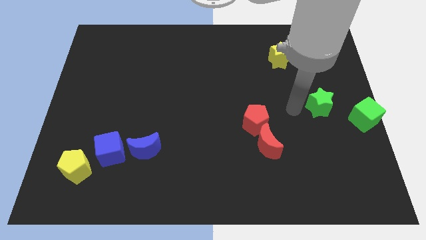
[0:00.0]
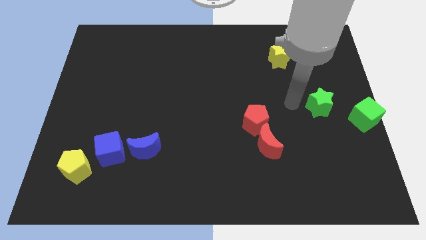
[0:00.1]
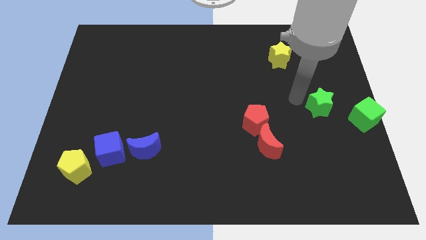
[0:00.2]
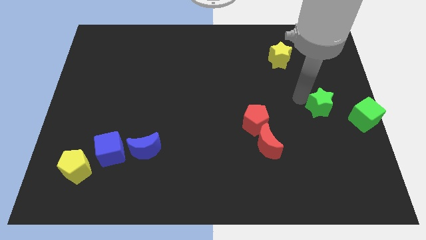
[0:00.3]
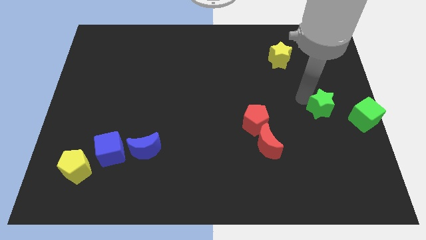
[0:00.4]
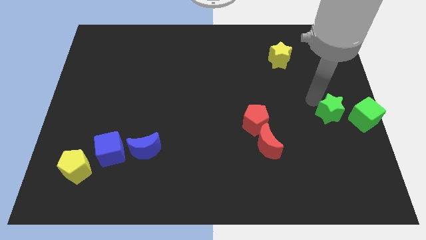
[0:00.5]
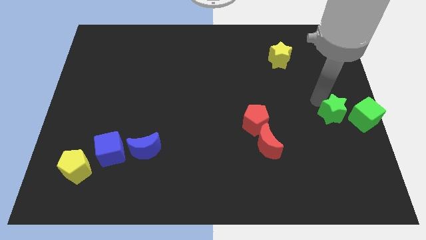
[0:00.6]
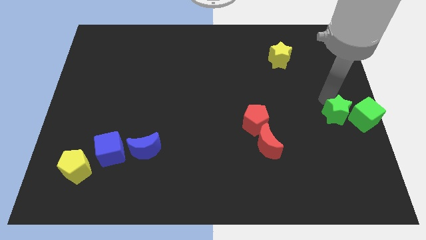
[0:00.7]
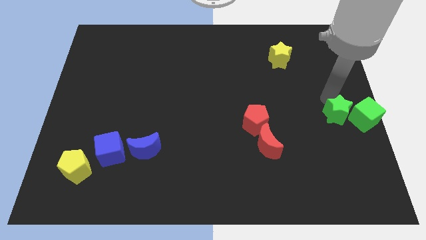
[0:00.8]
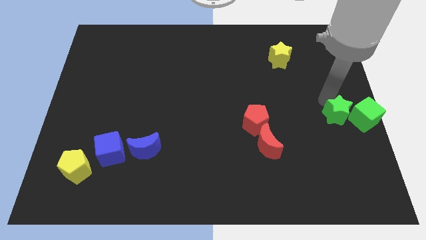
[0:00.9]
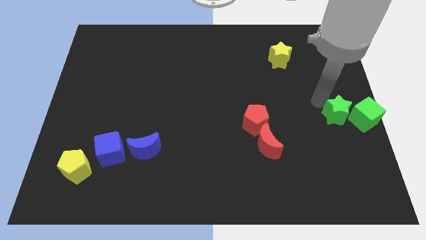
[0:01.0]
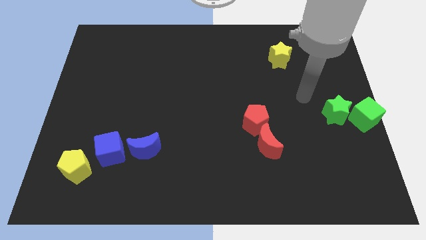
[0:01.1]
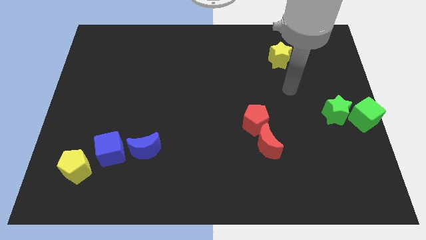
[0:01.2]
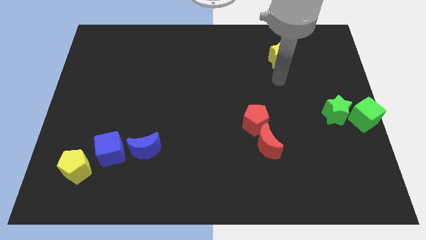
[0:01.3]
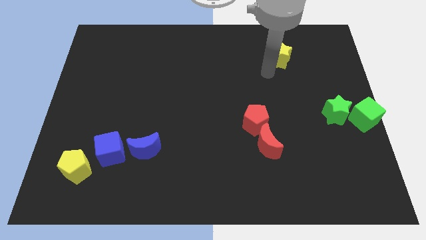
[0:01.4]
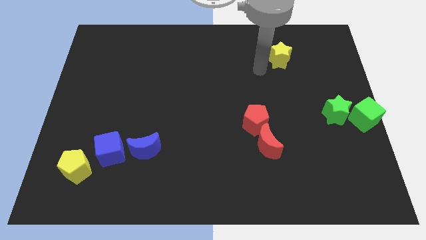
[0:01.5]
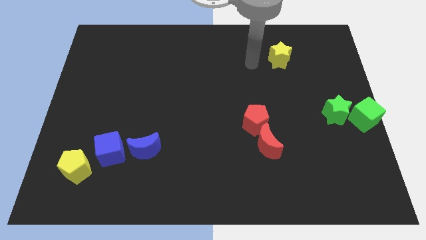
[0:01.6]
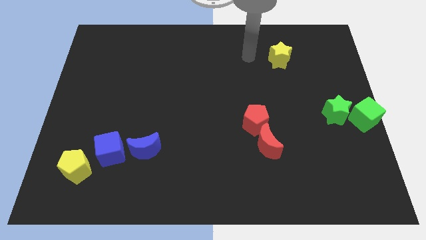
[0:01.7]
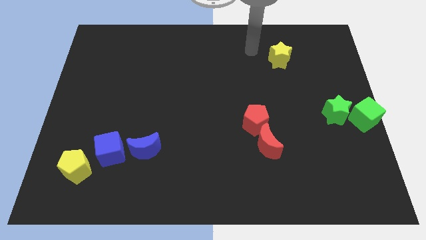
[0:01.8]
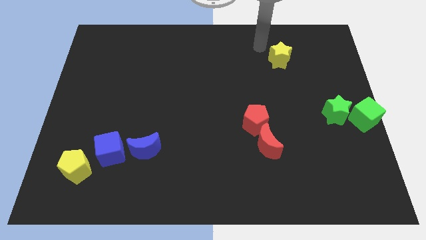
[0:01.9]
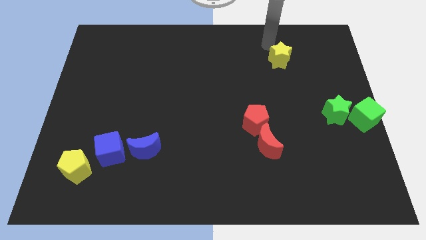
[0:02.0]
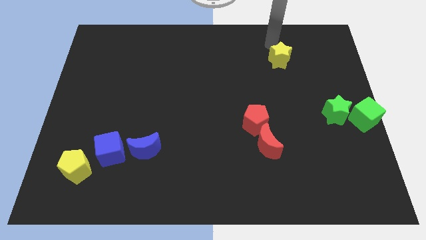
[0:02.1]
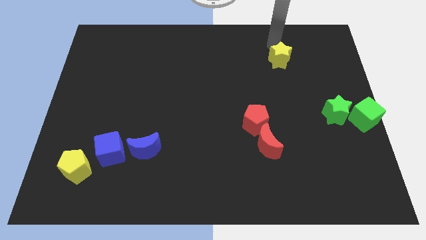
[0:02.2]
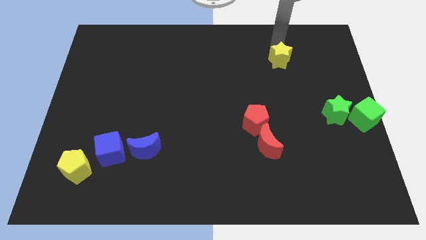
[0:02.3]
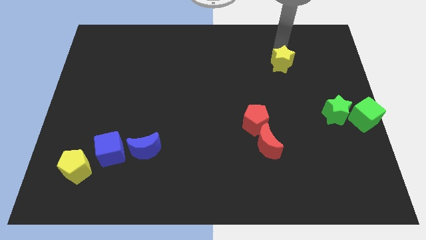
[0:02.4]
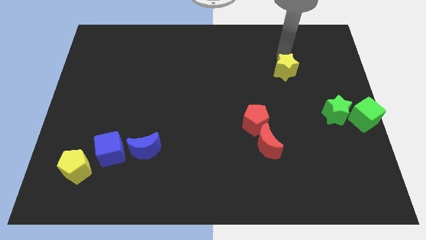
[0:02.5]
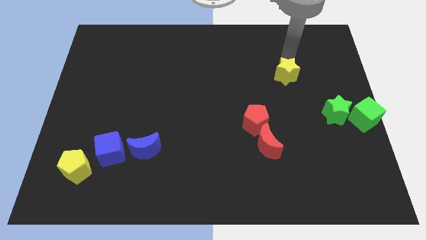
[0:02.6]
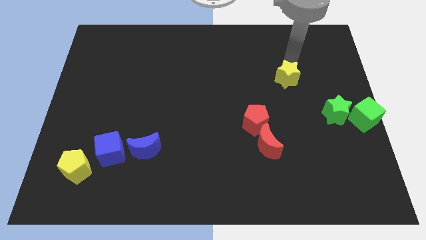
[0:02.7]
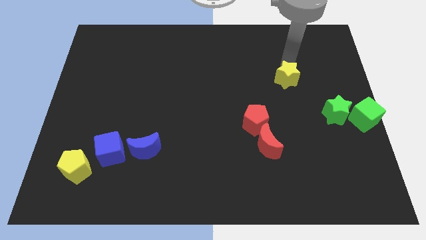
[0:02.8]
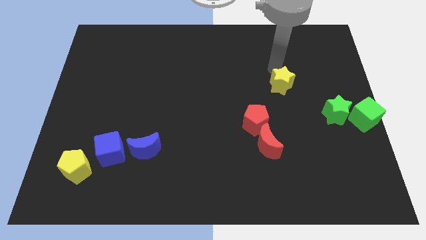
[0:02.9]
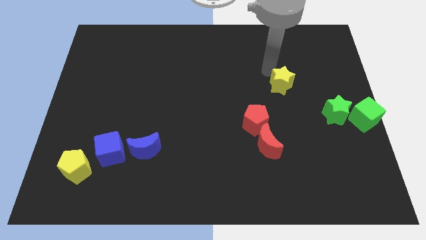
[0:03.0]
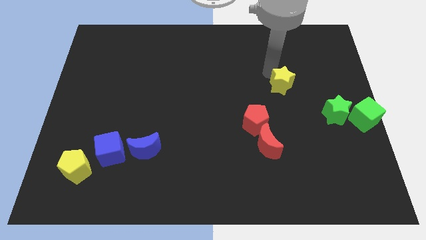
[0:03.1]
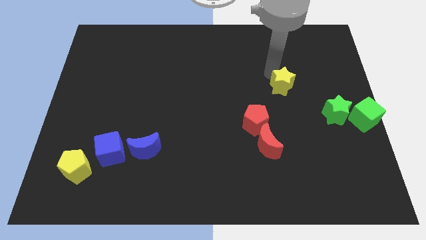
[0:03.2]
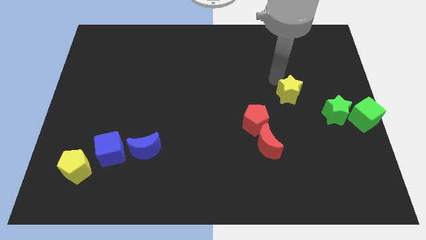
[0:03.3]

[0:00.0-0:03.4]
push the yellow star diagonally top right to the red pentagon

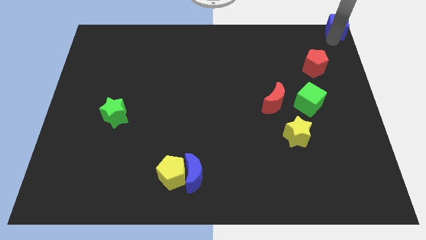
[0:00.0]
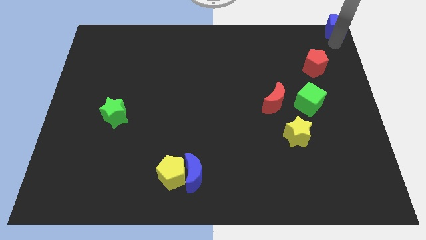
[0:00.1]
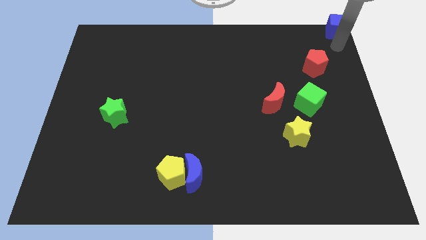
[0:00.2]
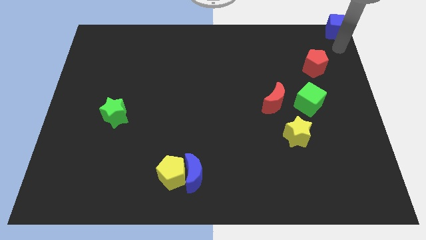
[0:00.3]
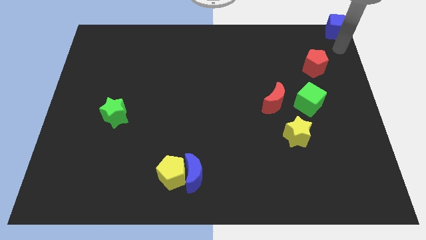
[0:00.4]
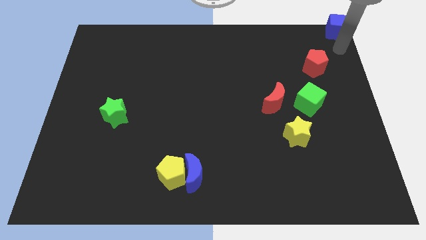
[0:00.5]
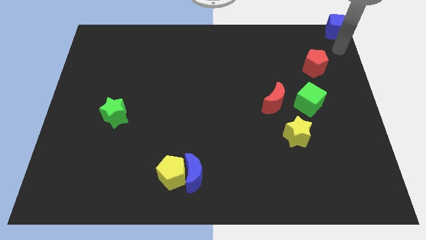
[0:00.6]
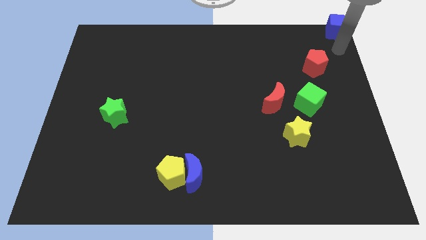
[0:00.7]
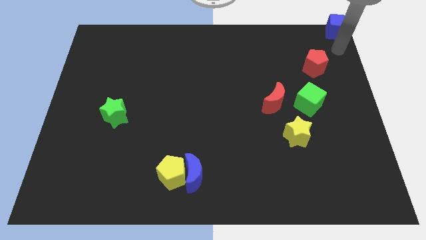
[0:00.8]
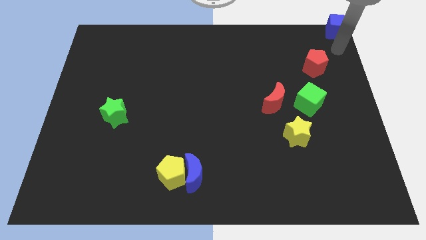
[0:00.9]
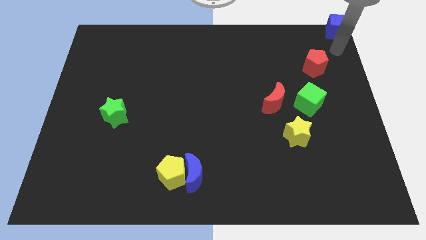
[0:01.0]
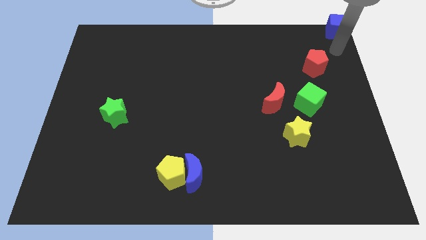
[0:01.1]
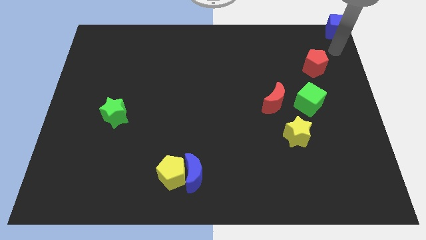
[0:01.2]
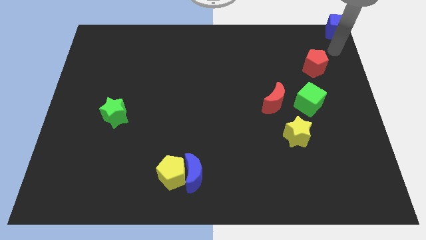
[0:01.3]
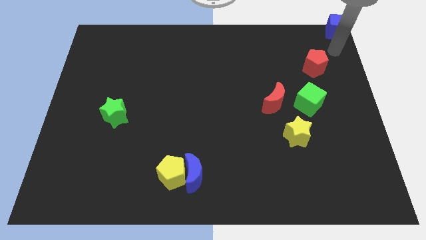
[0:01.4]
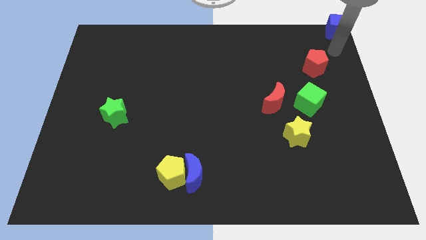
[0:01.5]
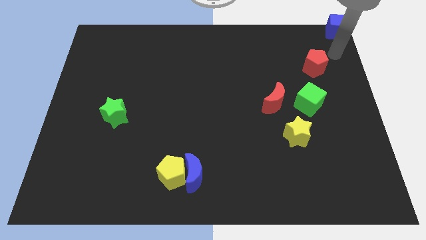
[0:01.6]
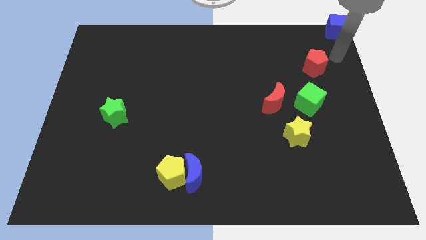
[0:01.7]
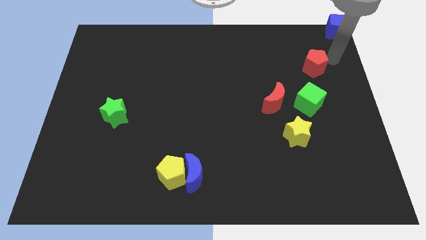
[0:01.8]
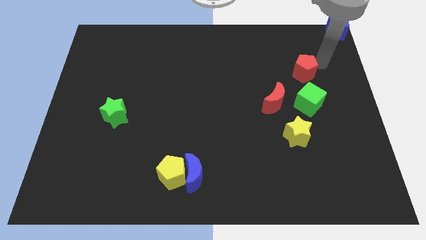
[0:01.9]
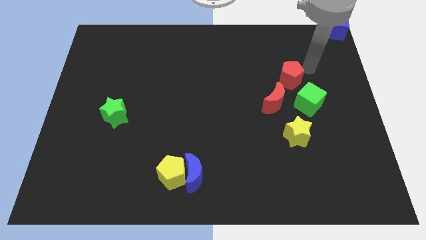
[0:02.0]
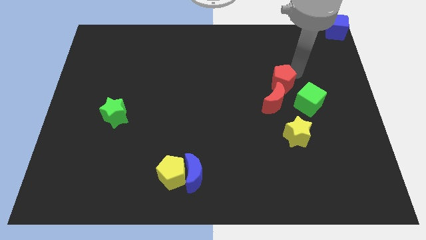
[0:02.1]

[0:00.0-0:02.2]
push the red pentagon towards the red moon

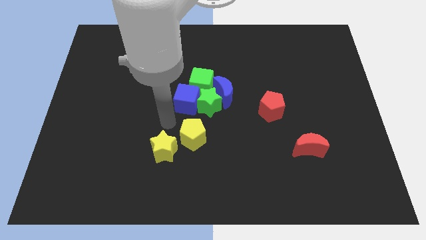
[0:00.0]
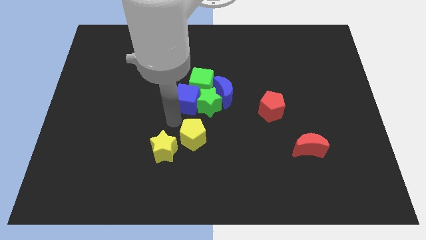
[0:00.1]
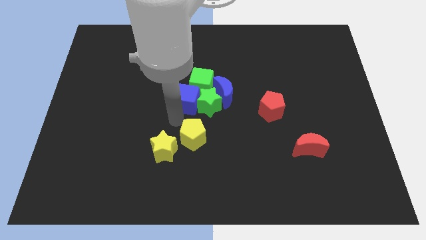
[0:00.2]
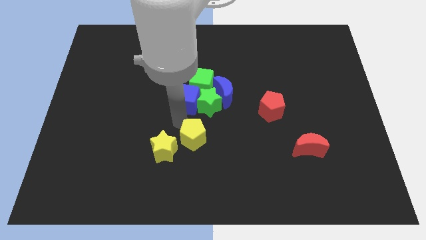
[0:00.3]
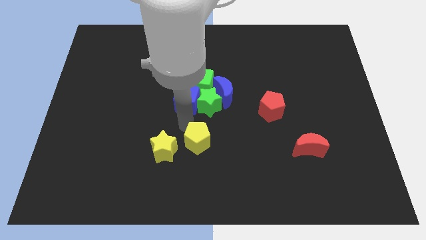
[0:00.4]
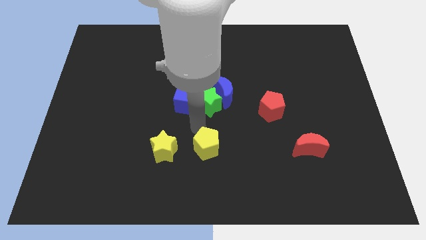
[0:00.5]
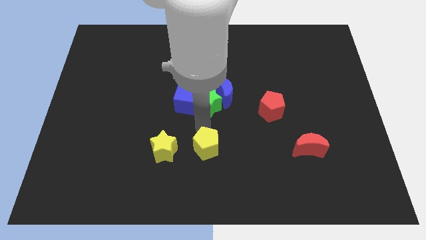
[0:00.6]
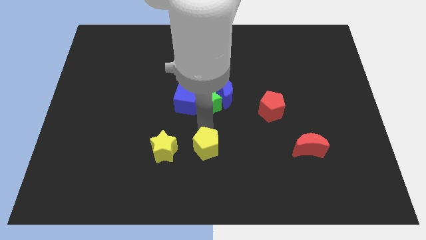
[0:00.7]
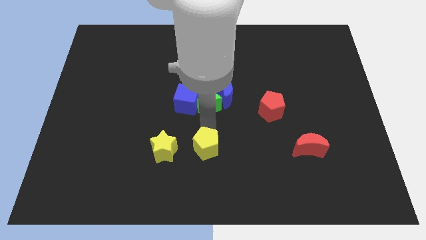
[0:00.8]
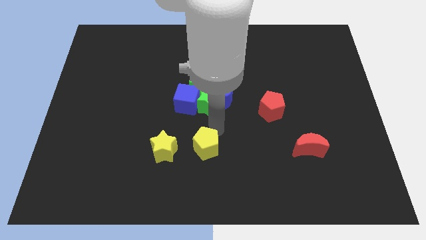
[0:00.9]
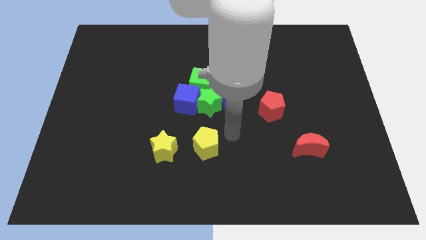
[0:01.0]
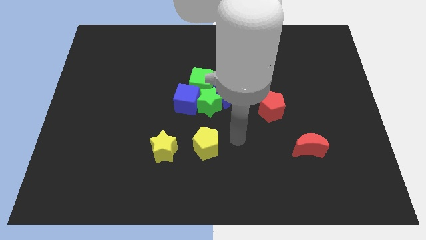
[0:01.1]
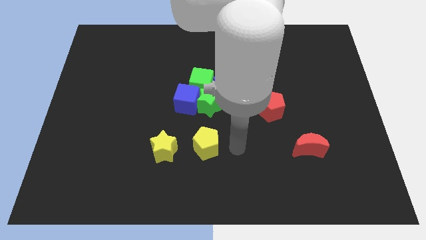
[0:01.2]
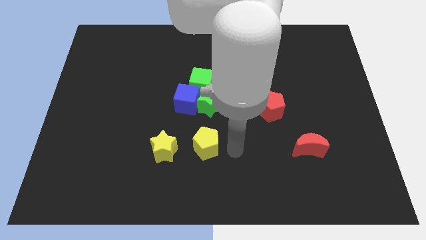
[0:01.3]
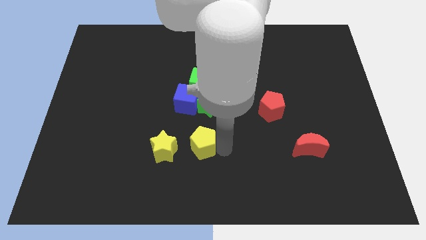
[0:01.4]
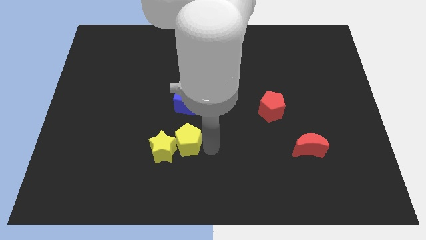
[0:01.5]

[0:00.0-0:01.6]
move the yellow pentagon to the right of the yellow star

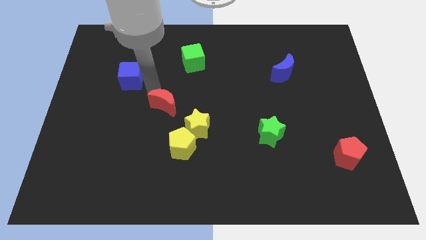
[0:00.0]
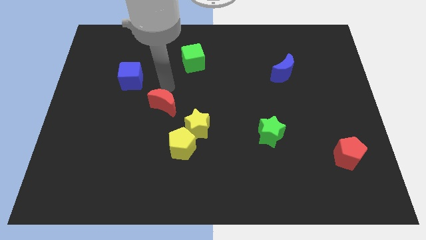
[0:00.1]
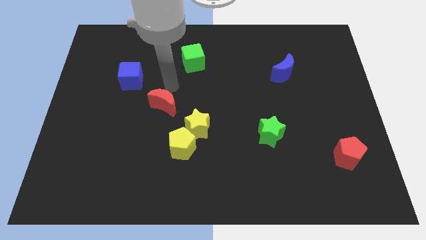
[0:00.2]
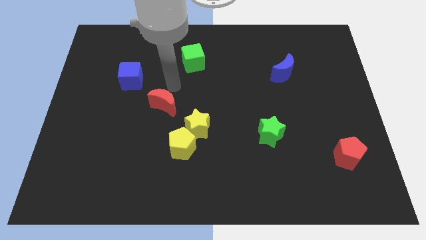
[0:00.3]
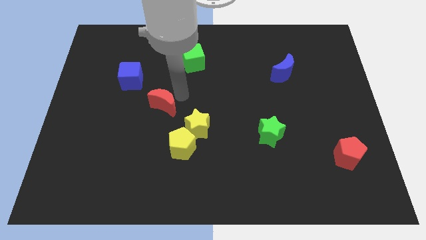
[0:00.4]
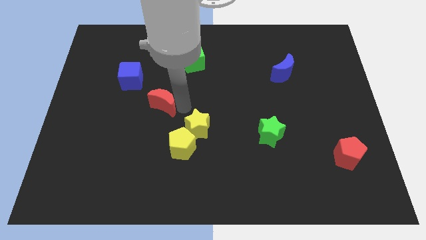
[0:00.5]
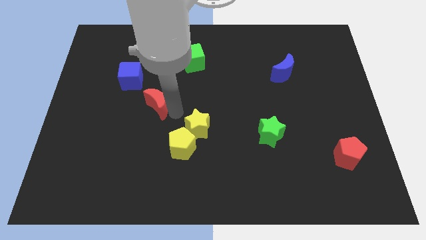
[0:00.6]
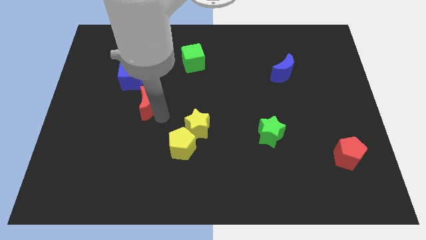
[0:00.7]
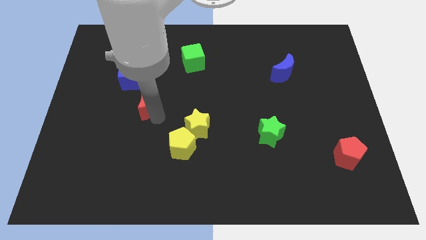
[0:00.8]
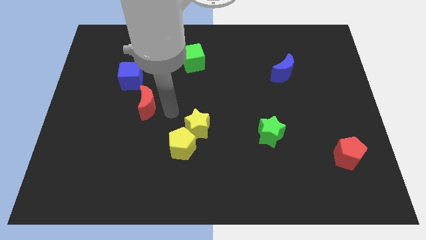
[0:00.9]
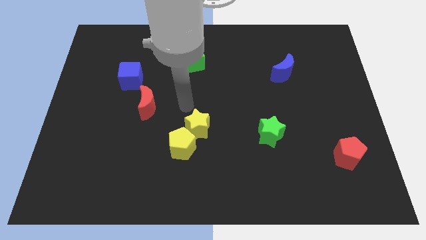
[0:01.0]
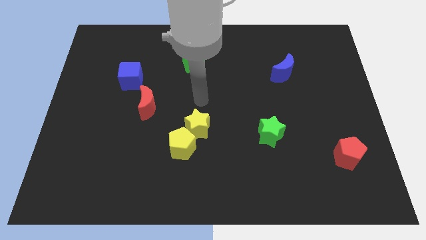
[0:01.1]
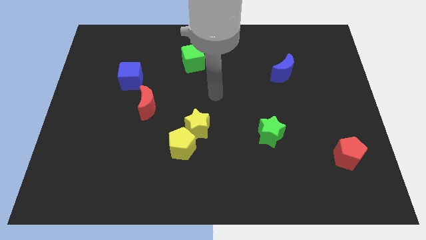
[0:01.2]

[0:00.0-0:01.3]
slightly adjust the place of red moon to the bottom right side of the blue cube

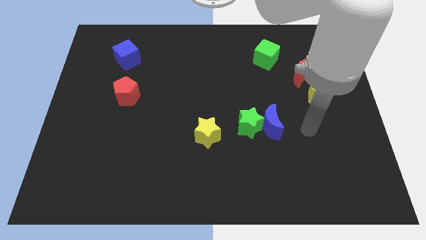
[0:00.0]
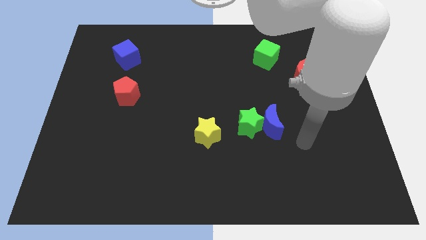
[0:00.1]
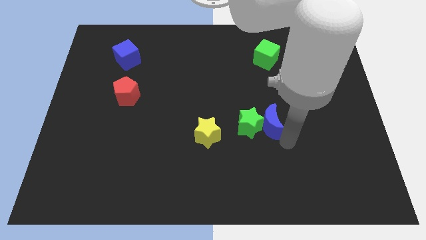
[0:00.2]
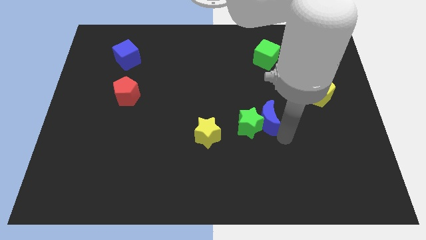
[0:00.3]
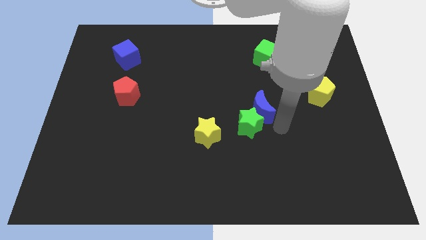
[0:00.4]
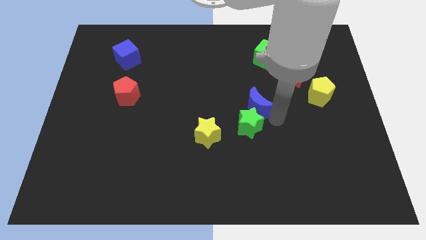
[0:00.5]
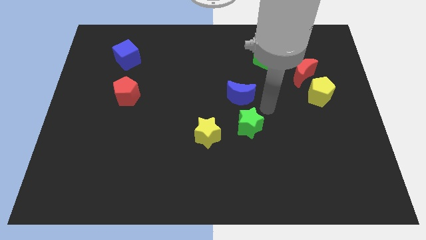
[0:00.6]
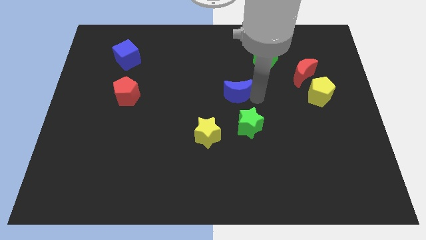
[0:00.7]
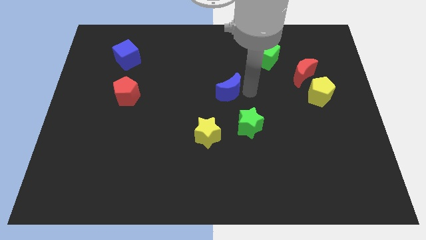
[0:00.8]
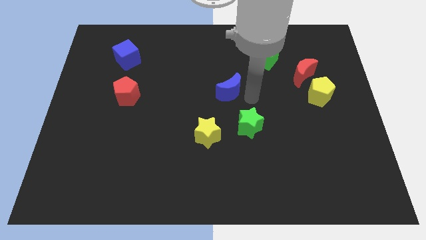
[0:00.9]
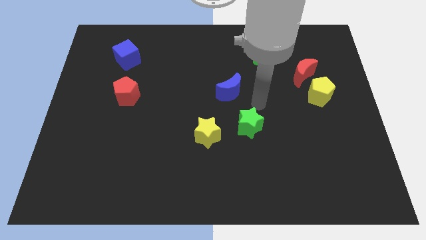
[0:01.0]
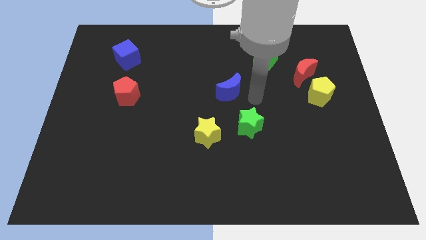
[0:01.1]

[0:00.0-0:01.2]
move the blue crescent to the center of the board
